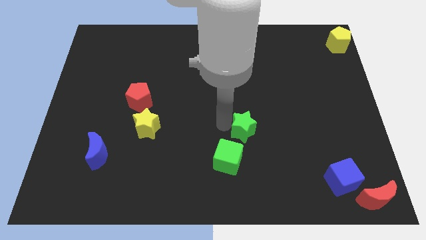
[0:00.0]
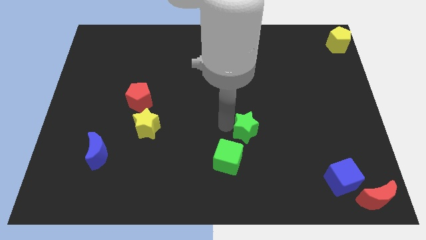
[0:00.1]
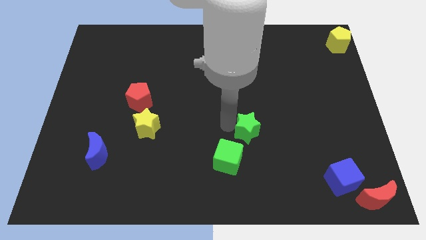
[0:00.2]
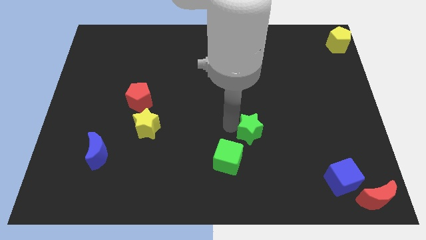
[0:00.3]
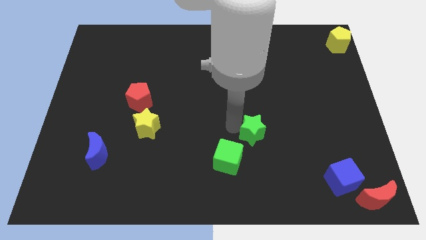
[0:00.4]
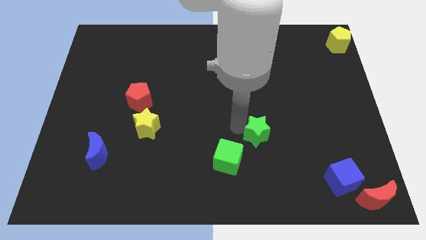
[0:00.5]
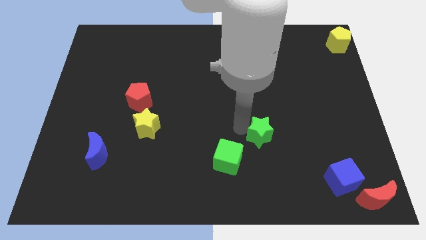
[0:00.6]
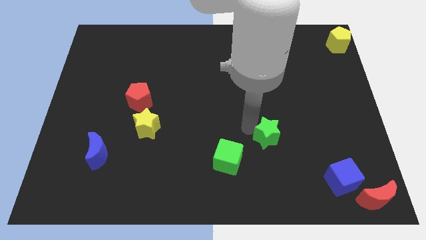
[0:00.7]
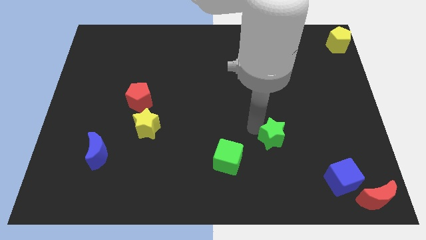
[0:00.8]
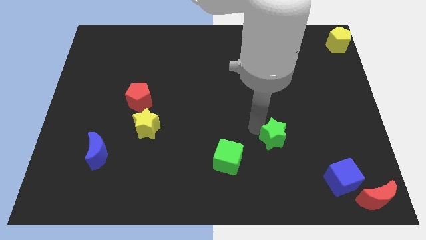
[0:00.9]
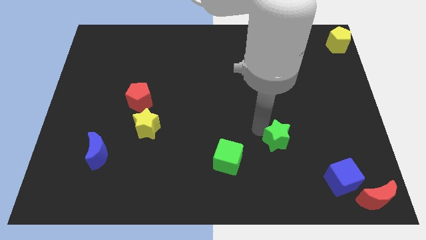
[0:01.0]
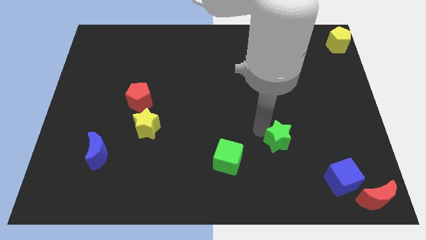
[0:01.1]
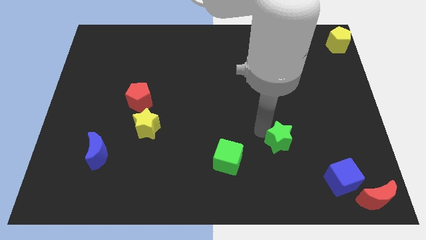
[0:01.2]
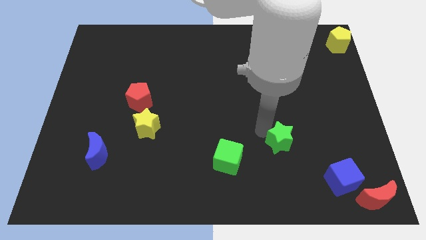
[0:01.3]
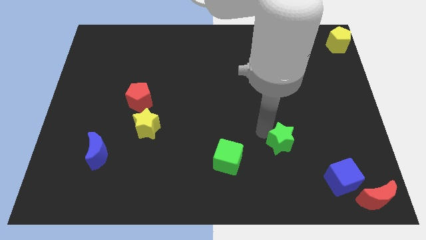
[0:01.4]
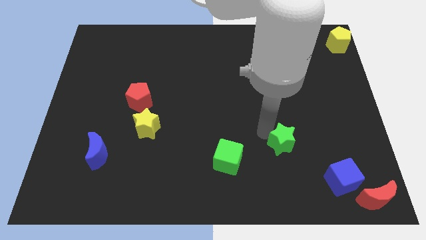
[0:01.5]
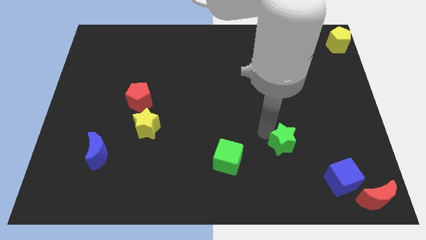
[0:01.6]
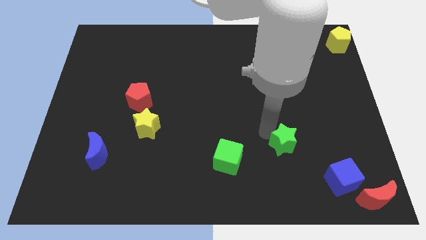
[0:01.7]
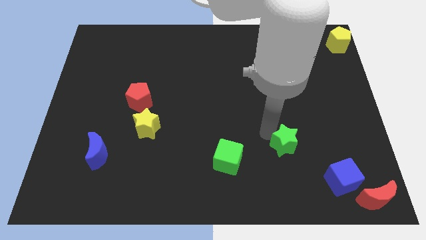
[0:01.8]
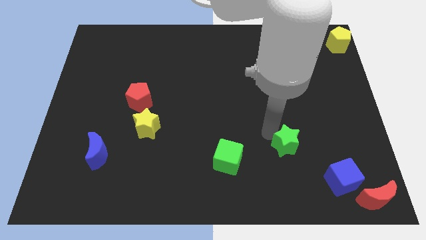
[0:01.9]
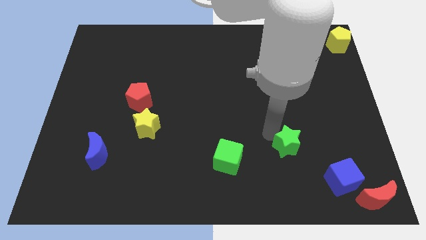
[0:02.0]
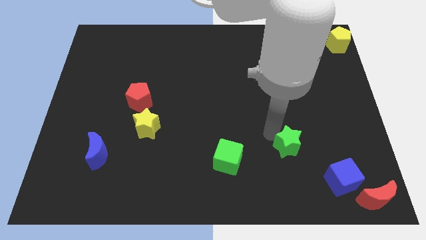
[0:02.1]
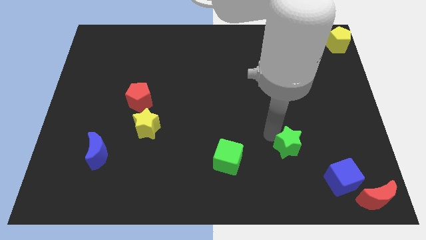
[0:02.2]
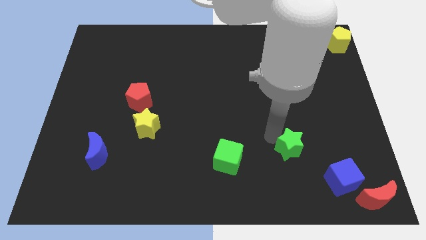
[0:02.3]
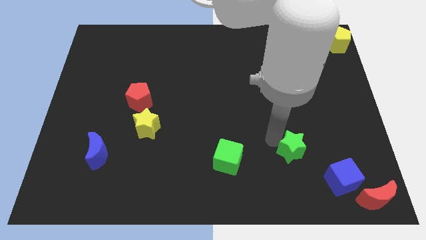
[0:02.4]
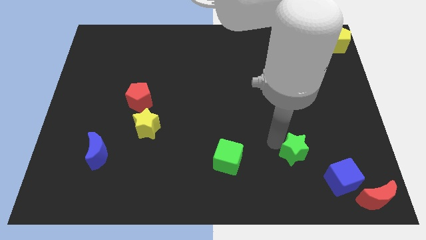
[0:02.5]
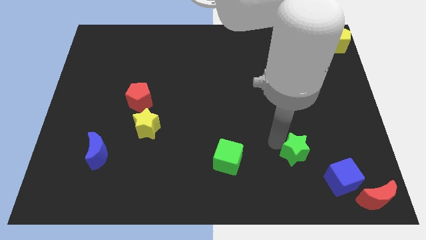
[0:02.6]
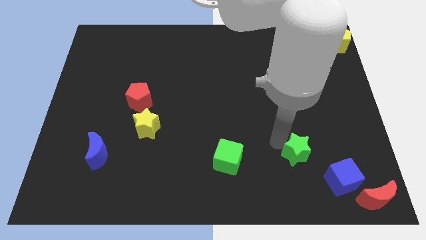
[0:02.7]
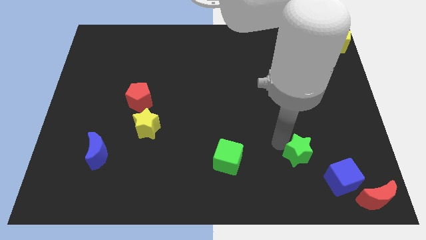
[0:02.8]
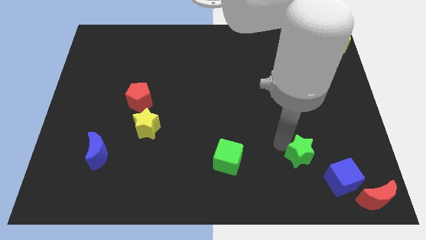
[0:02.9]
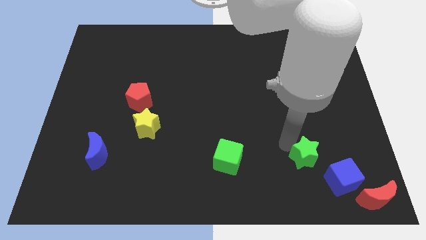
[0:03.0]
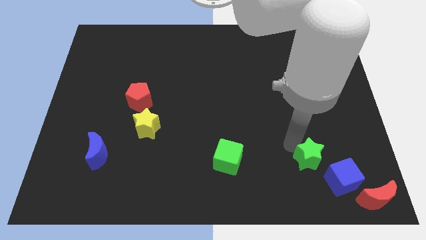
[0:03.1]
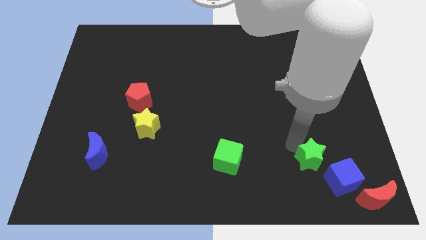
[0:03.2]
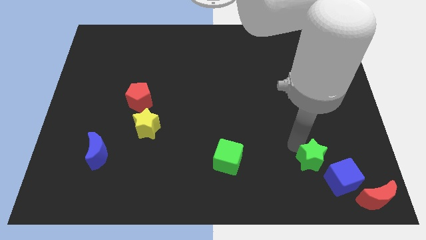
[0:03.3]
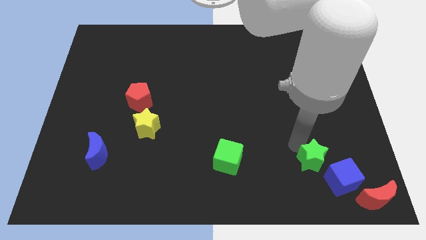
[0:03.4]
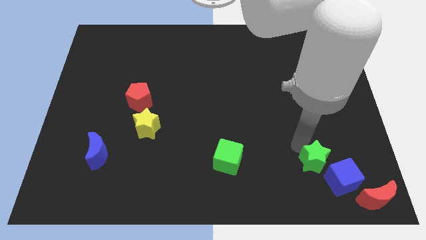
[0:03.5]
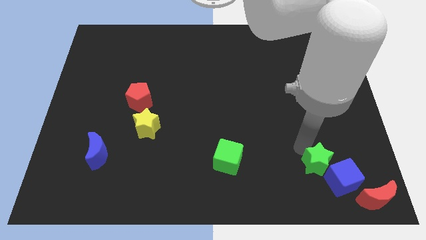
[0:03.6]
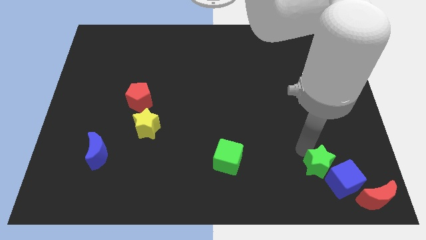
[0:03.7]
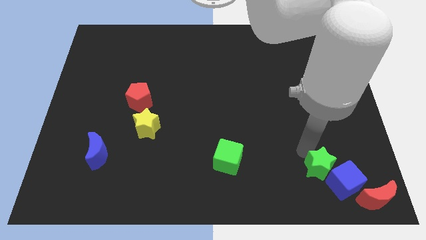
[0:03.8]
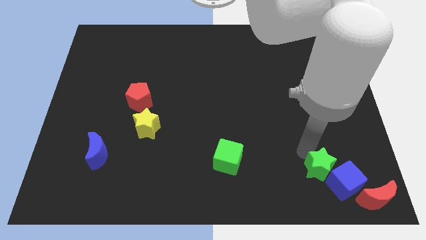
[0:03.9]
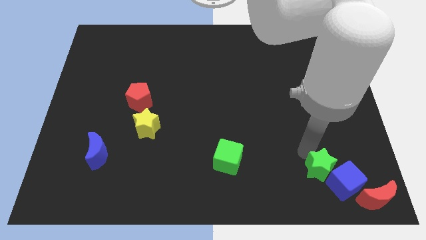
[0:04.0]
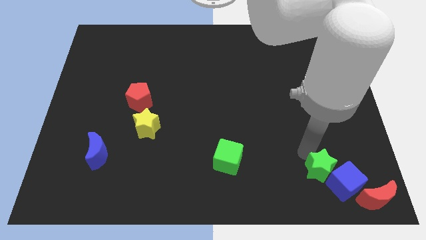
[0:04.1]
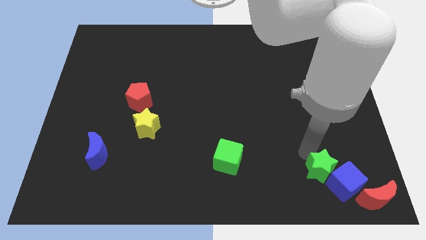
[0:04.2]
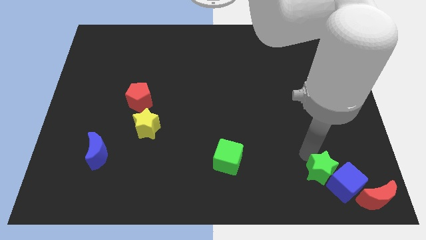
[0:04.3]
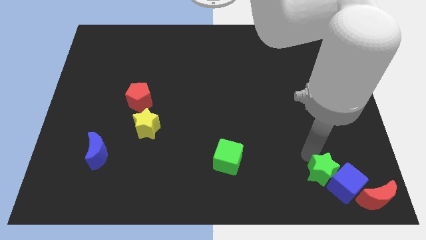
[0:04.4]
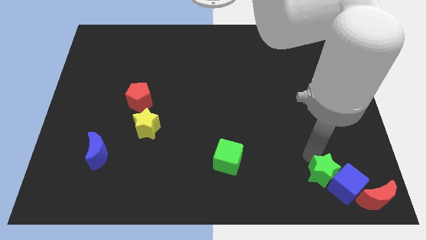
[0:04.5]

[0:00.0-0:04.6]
push the green star into the blue cube

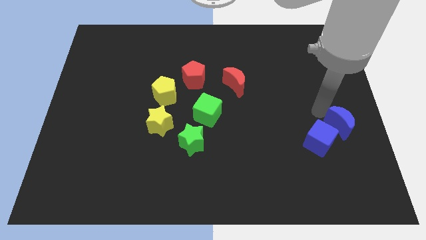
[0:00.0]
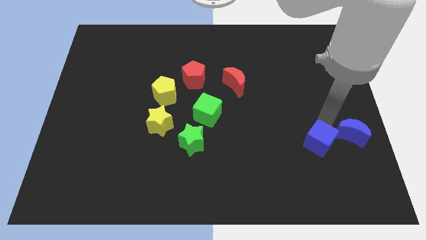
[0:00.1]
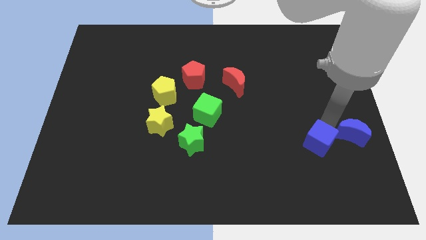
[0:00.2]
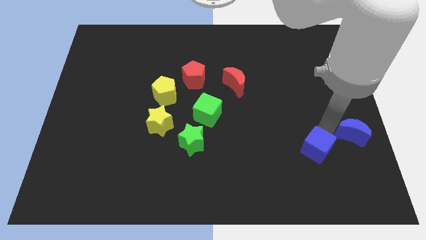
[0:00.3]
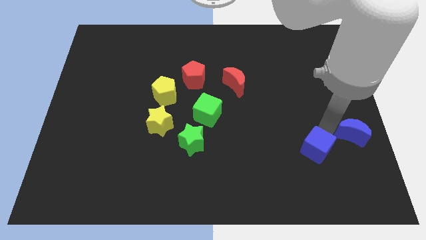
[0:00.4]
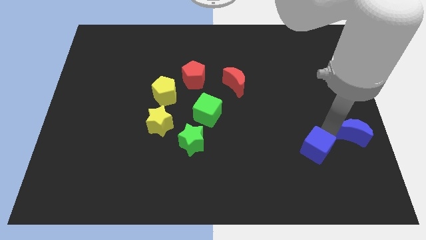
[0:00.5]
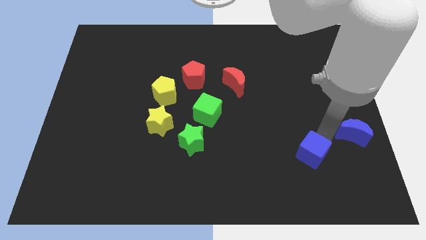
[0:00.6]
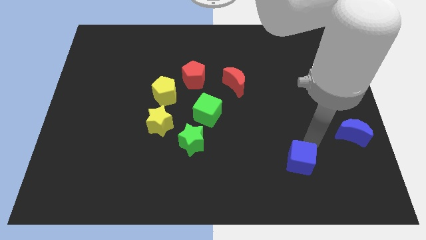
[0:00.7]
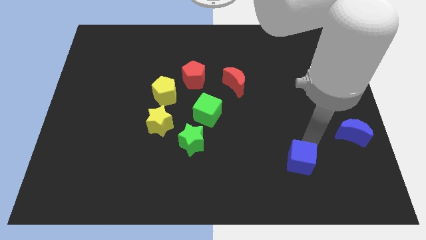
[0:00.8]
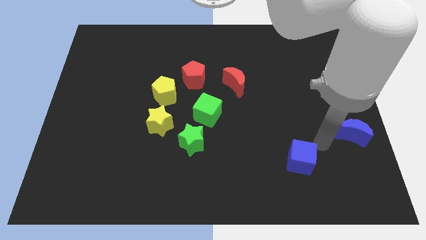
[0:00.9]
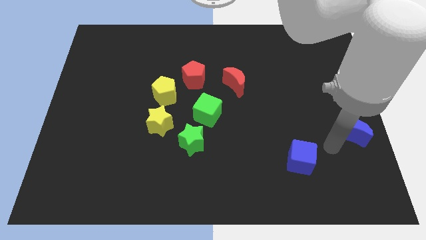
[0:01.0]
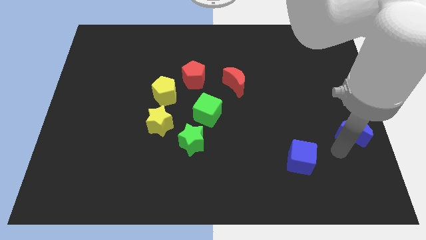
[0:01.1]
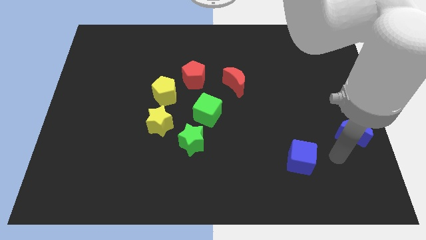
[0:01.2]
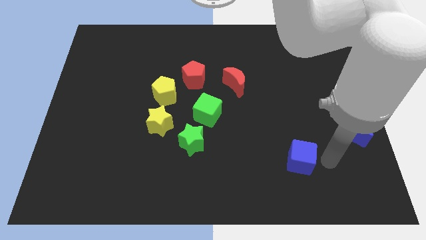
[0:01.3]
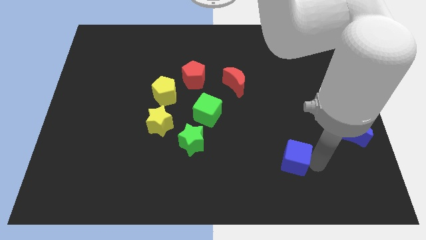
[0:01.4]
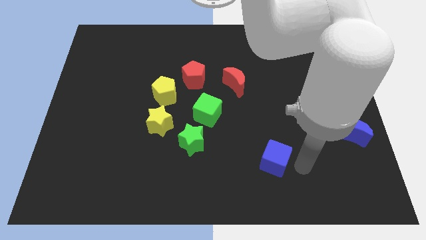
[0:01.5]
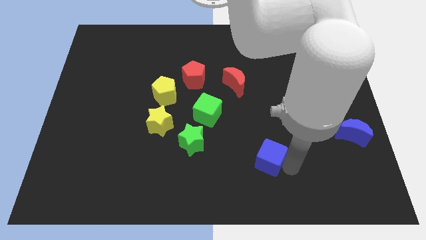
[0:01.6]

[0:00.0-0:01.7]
move blue cube away from the blue moon

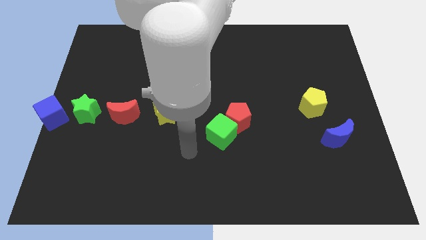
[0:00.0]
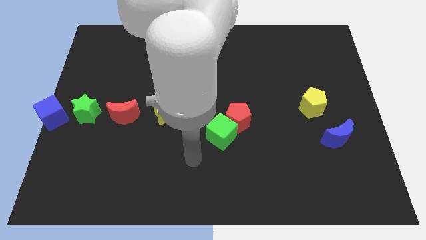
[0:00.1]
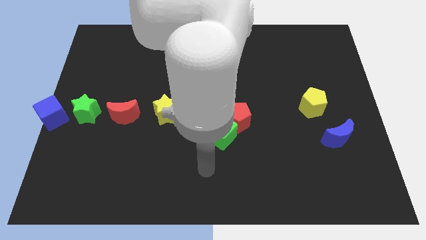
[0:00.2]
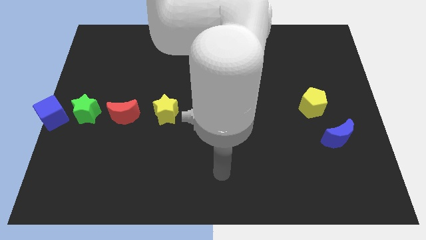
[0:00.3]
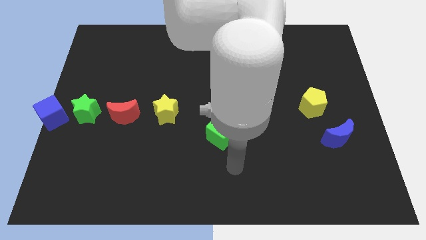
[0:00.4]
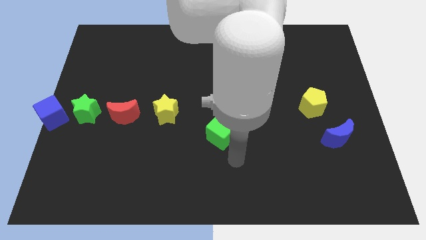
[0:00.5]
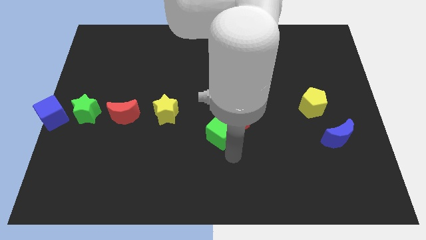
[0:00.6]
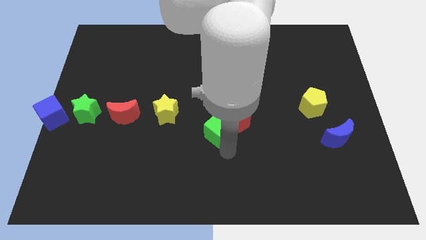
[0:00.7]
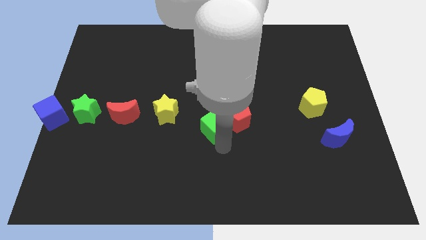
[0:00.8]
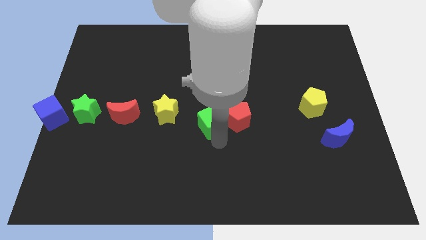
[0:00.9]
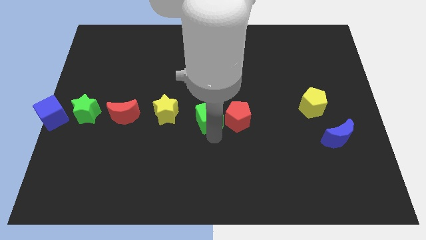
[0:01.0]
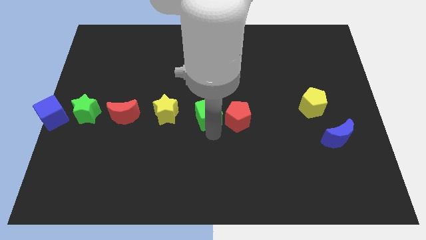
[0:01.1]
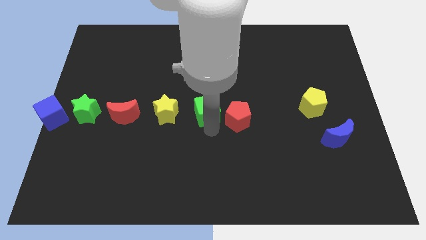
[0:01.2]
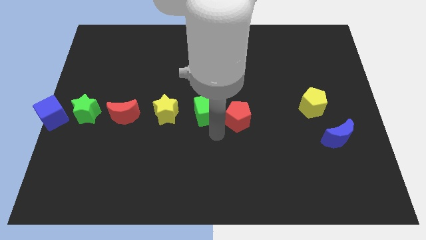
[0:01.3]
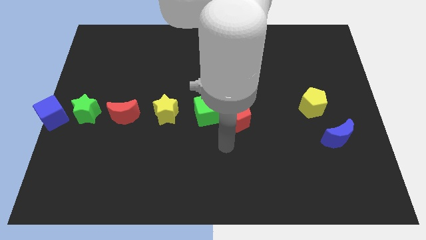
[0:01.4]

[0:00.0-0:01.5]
slide the green cube to the left of the red pentagon

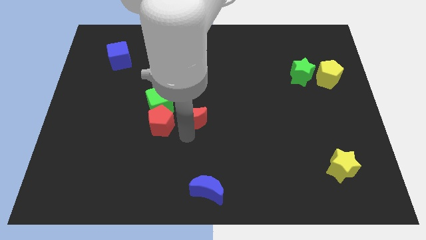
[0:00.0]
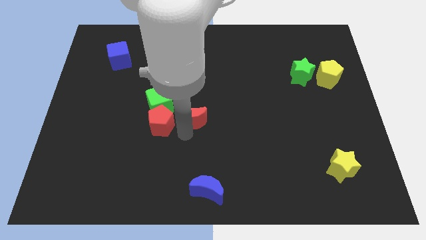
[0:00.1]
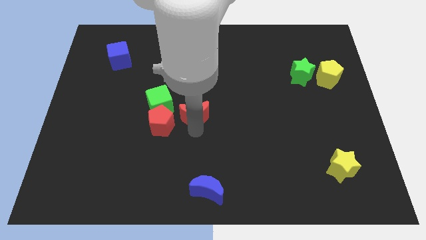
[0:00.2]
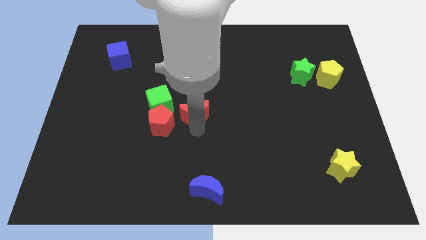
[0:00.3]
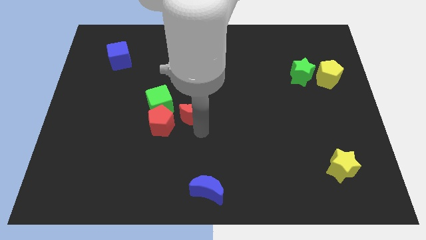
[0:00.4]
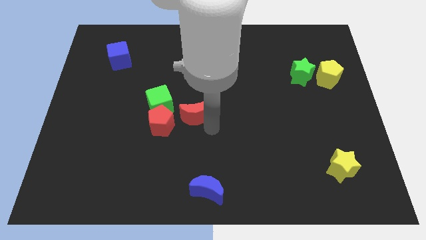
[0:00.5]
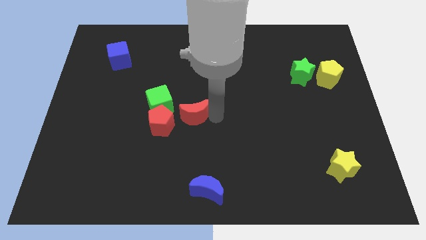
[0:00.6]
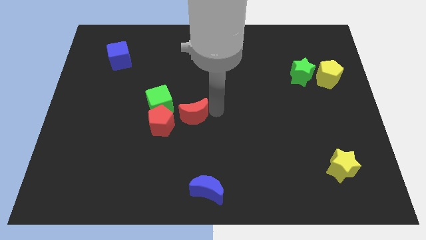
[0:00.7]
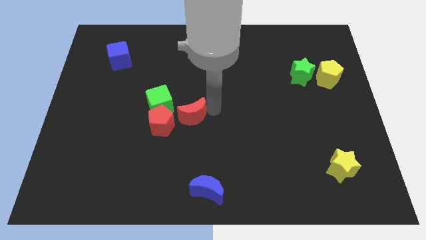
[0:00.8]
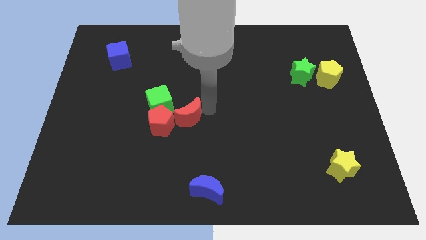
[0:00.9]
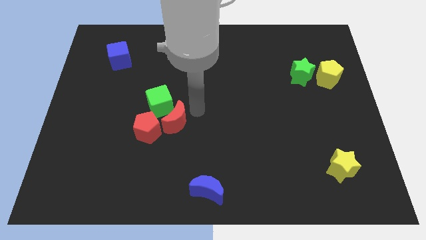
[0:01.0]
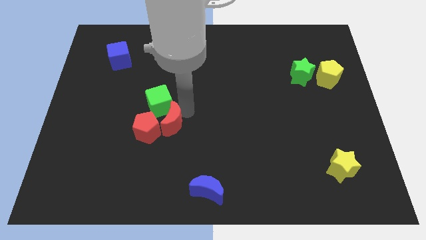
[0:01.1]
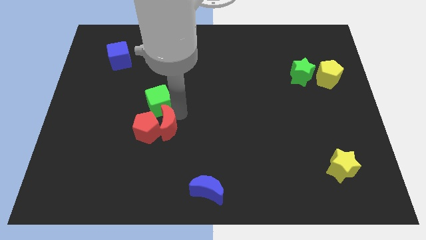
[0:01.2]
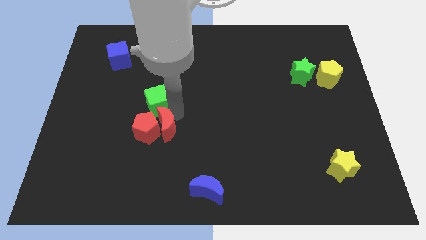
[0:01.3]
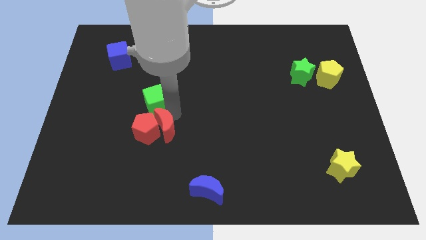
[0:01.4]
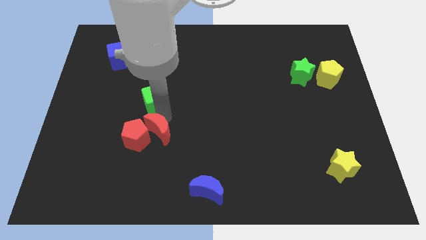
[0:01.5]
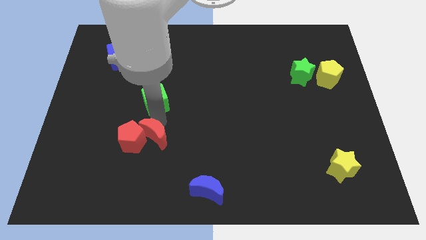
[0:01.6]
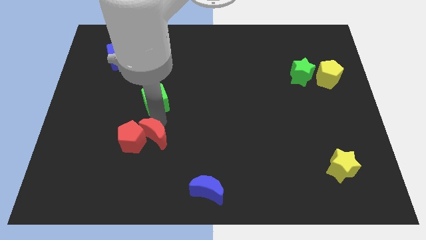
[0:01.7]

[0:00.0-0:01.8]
move the red objects away from the green cube
